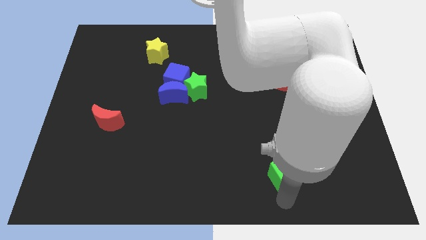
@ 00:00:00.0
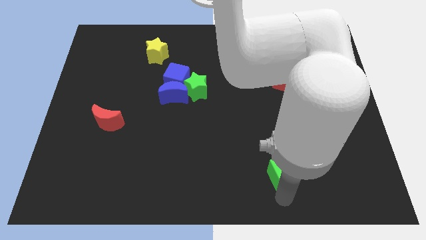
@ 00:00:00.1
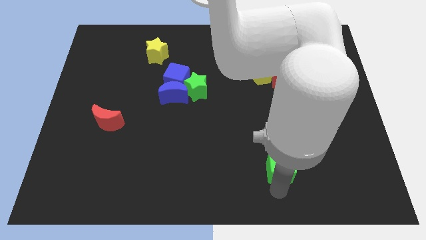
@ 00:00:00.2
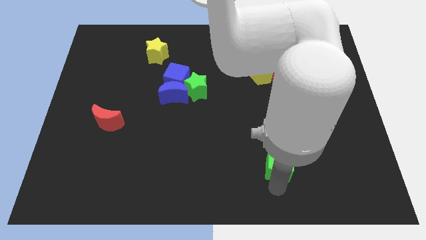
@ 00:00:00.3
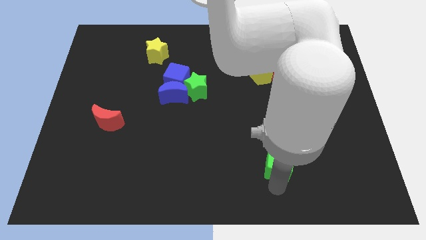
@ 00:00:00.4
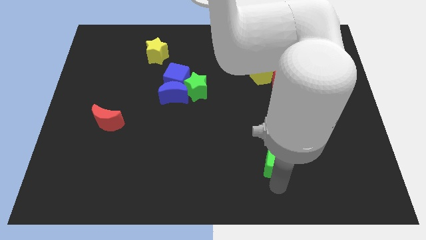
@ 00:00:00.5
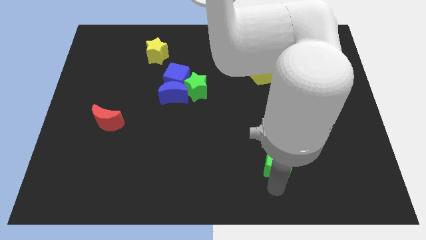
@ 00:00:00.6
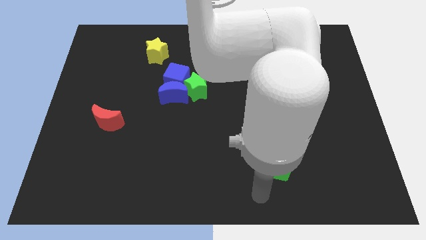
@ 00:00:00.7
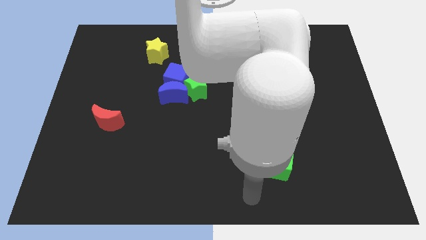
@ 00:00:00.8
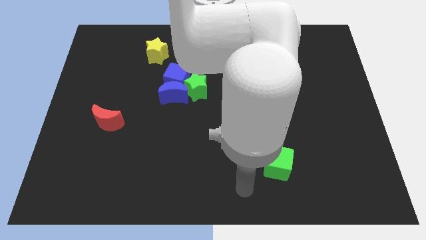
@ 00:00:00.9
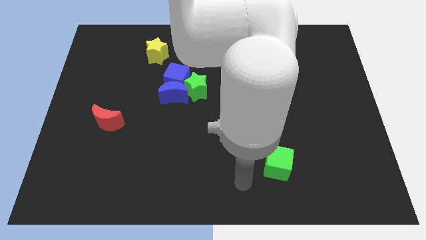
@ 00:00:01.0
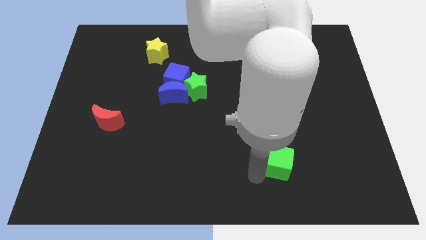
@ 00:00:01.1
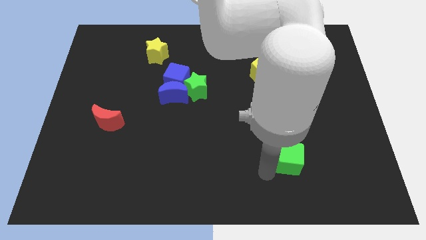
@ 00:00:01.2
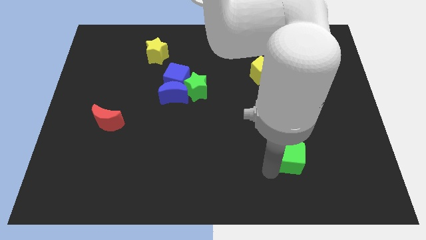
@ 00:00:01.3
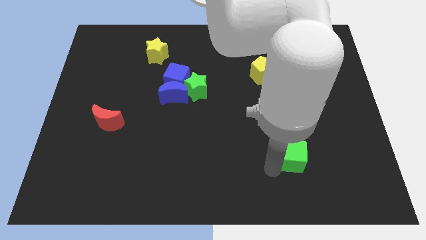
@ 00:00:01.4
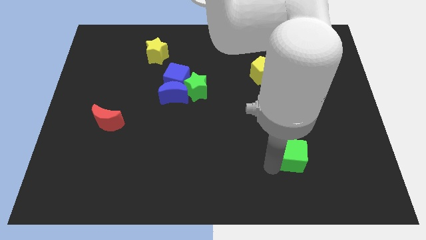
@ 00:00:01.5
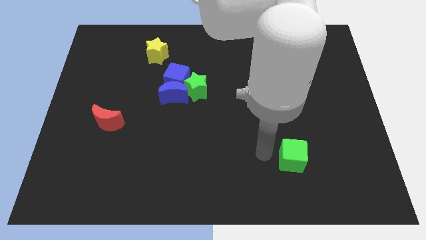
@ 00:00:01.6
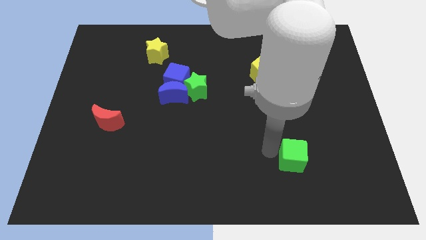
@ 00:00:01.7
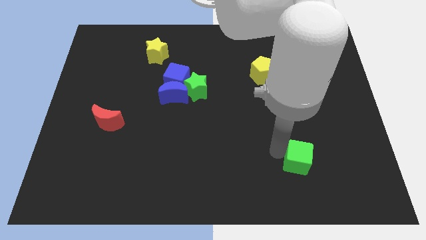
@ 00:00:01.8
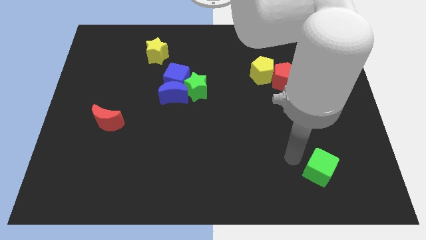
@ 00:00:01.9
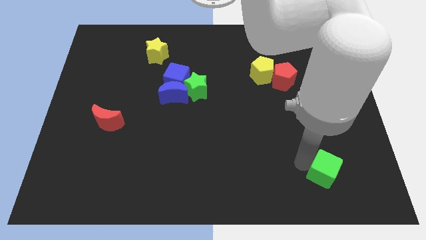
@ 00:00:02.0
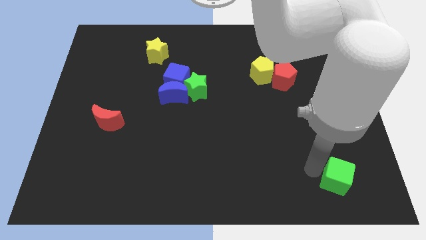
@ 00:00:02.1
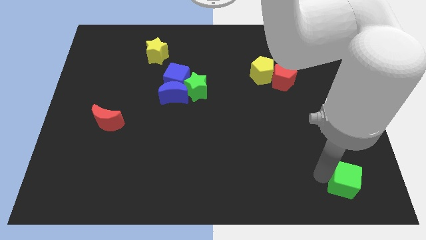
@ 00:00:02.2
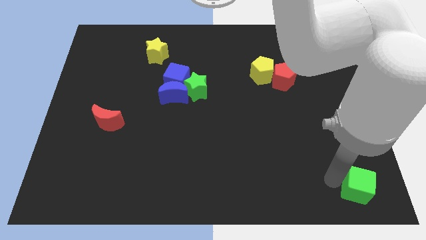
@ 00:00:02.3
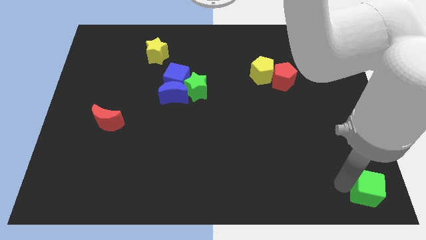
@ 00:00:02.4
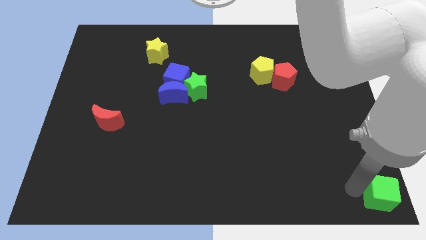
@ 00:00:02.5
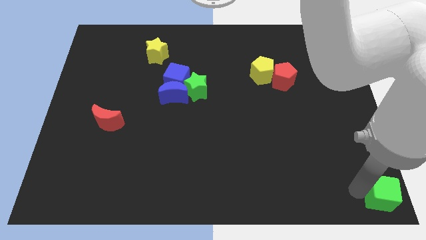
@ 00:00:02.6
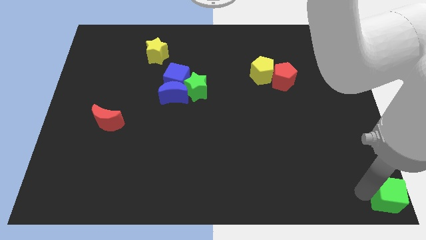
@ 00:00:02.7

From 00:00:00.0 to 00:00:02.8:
move the green cube to the bottom right of the board

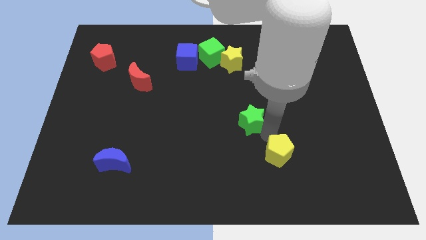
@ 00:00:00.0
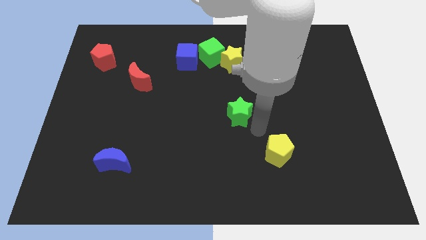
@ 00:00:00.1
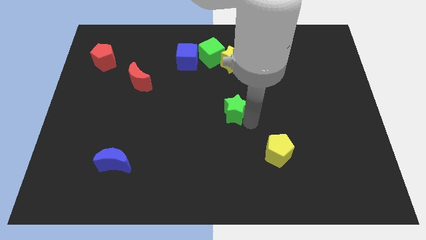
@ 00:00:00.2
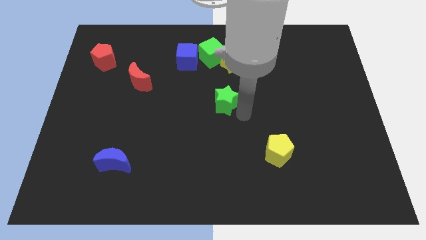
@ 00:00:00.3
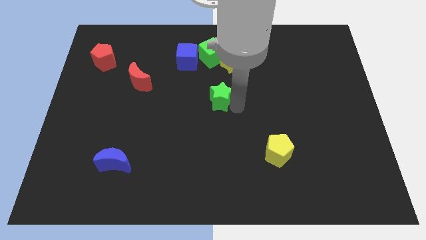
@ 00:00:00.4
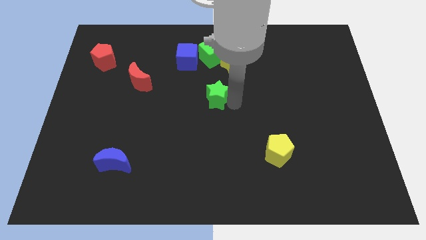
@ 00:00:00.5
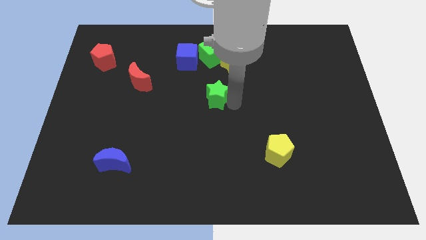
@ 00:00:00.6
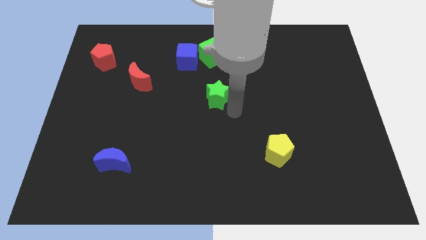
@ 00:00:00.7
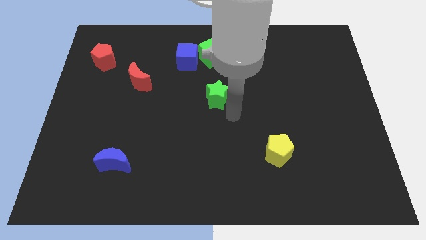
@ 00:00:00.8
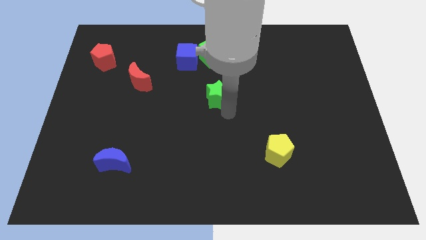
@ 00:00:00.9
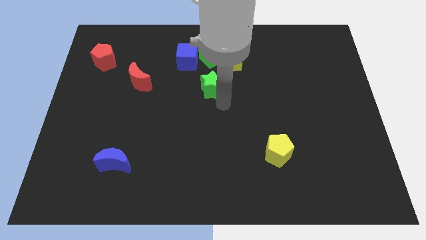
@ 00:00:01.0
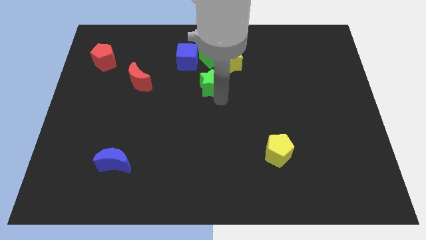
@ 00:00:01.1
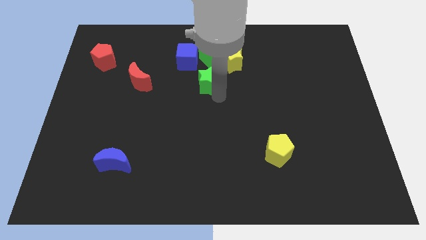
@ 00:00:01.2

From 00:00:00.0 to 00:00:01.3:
place the green star at the bottom of green cube

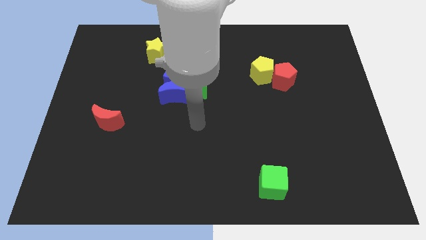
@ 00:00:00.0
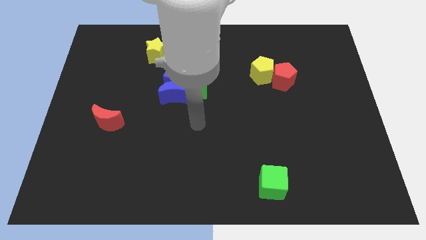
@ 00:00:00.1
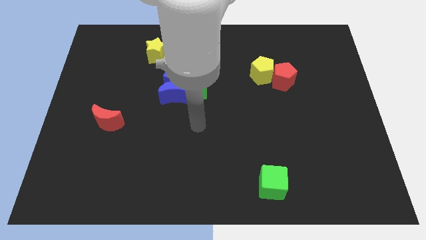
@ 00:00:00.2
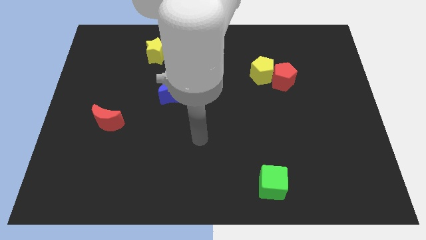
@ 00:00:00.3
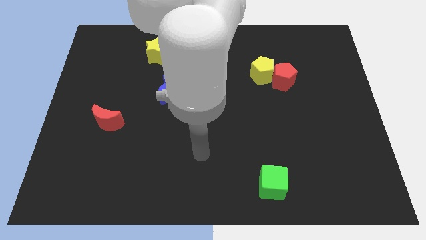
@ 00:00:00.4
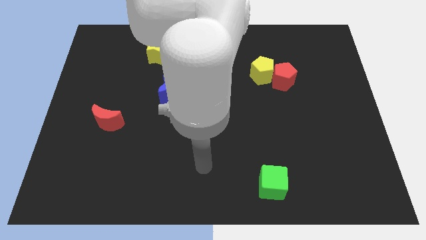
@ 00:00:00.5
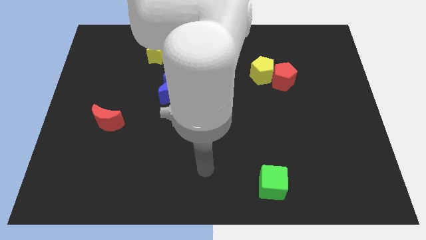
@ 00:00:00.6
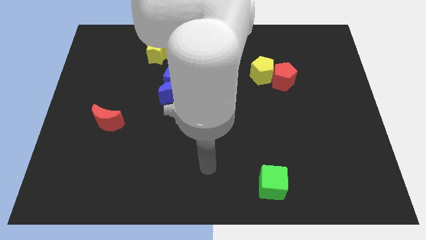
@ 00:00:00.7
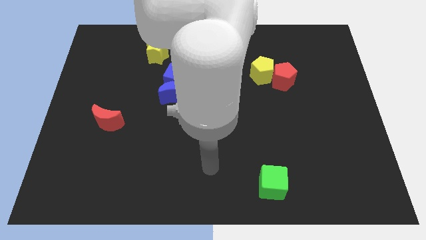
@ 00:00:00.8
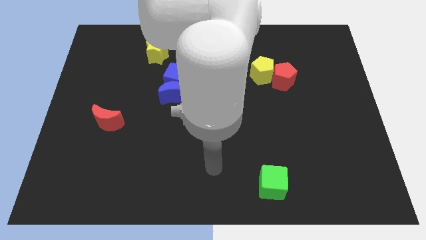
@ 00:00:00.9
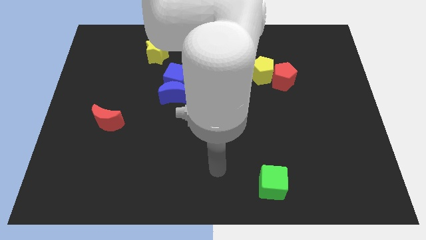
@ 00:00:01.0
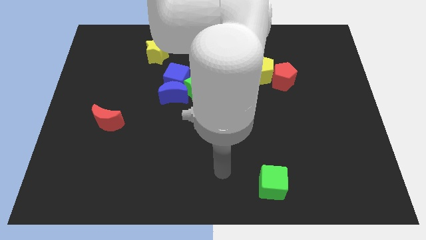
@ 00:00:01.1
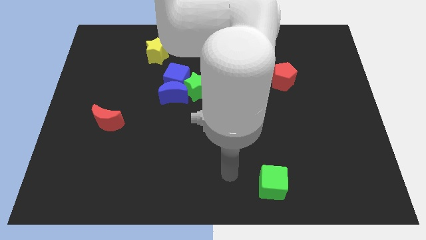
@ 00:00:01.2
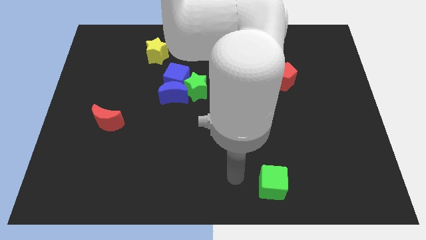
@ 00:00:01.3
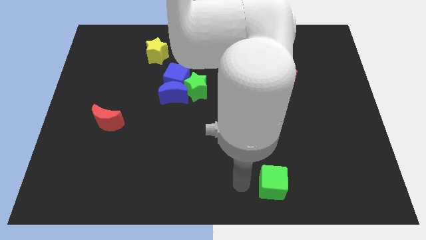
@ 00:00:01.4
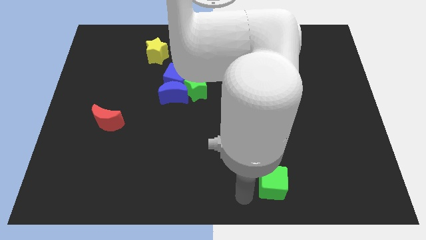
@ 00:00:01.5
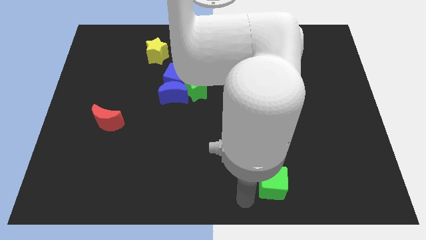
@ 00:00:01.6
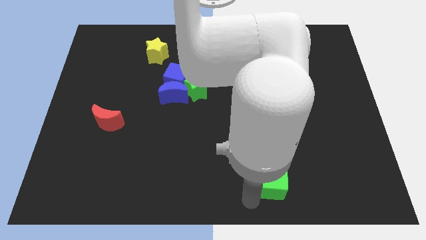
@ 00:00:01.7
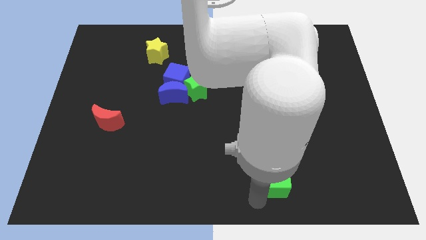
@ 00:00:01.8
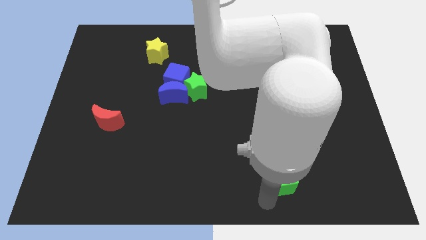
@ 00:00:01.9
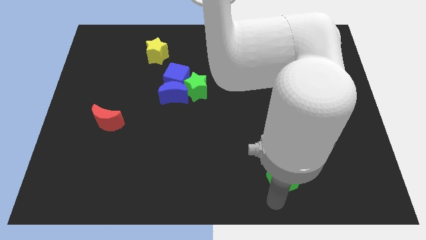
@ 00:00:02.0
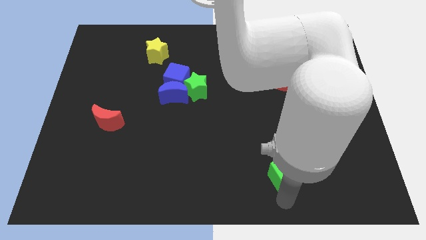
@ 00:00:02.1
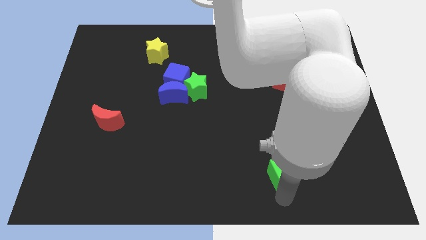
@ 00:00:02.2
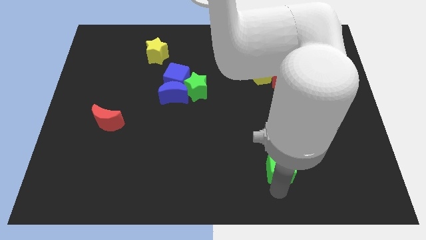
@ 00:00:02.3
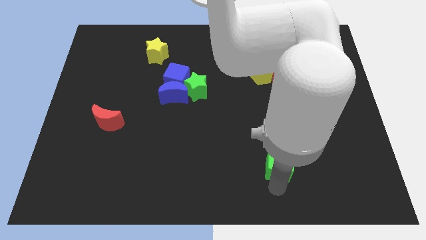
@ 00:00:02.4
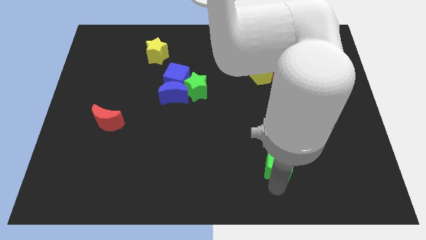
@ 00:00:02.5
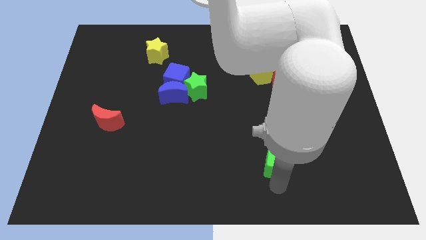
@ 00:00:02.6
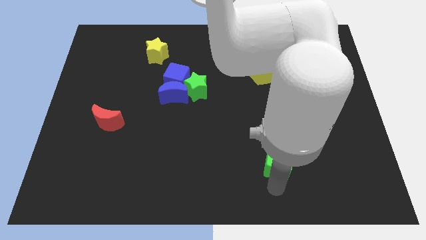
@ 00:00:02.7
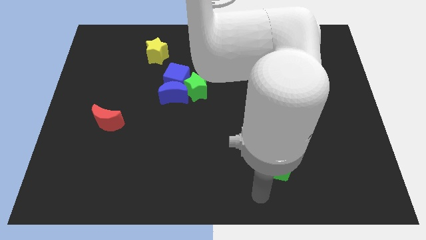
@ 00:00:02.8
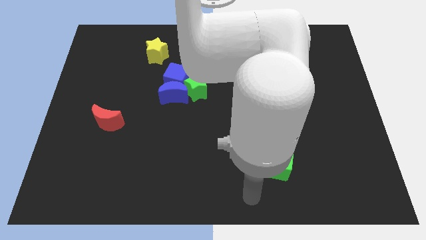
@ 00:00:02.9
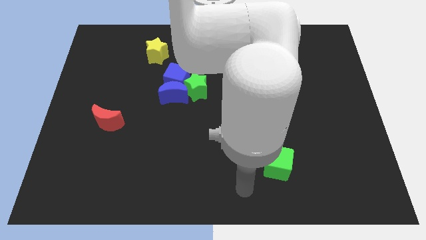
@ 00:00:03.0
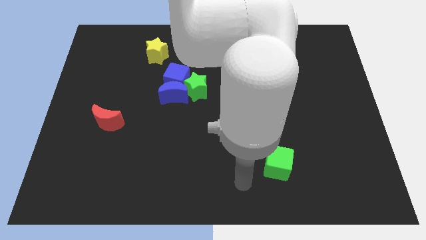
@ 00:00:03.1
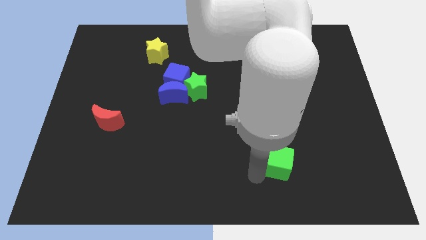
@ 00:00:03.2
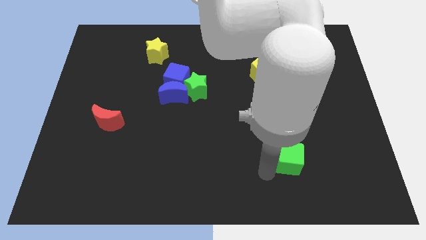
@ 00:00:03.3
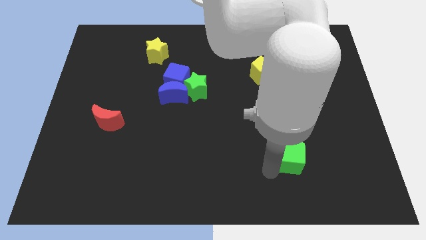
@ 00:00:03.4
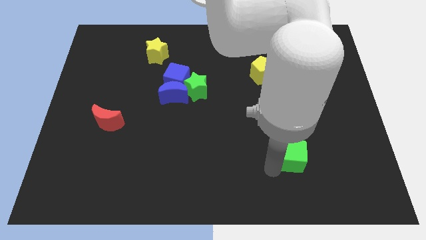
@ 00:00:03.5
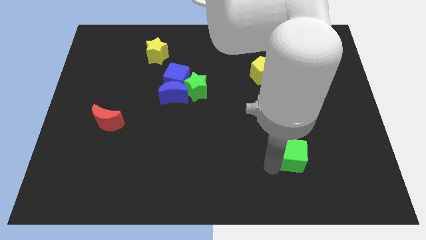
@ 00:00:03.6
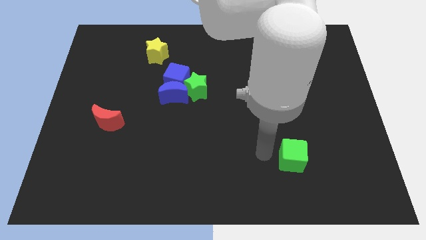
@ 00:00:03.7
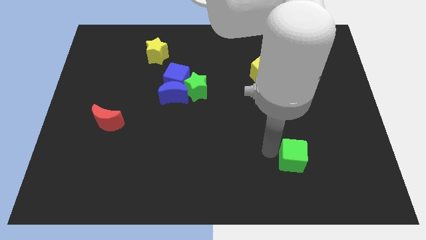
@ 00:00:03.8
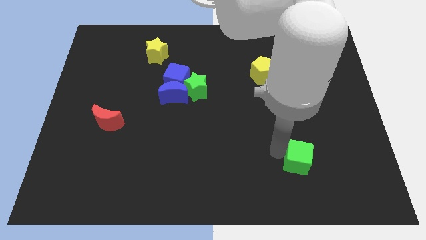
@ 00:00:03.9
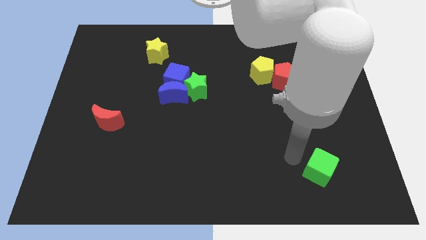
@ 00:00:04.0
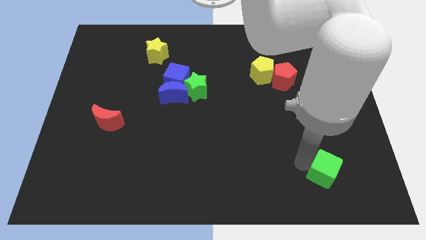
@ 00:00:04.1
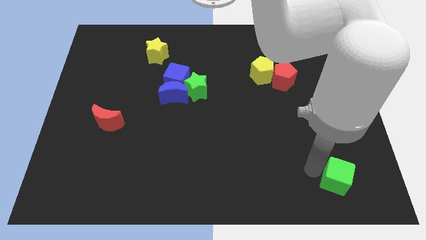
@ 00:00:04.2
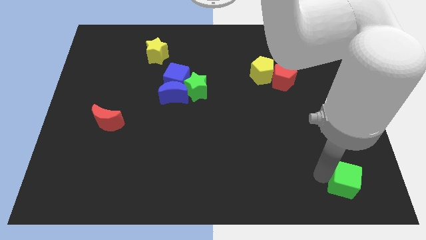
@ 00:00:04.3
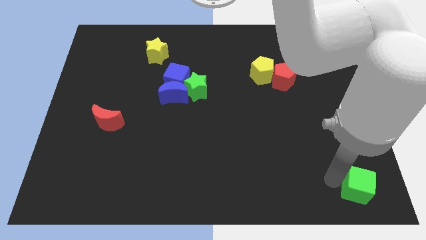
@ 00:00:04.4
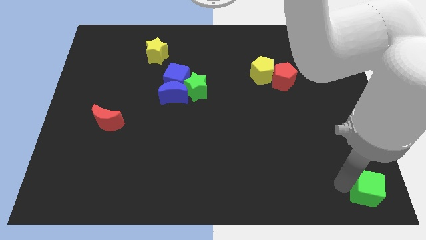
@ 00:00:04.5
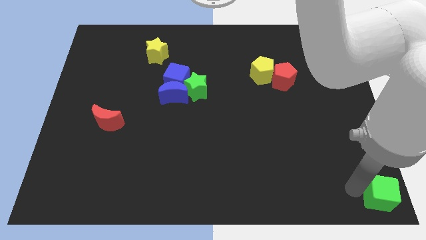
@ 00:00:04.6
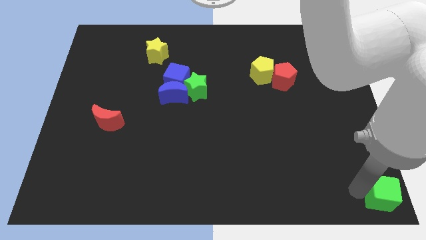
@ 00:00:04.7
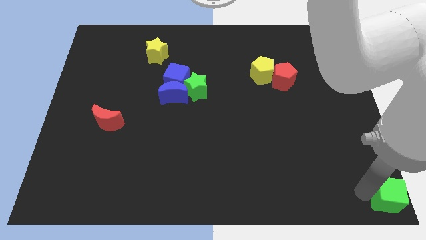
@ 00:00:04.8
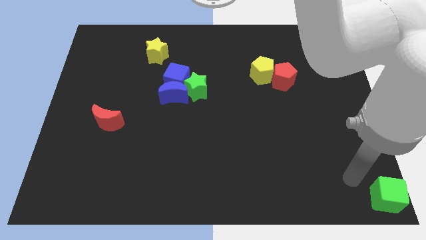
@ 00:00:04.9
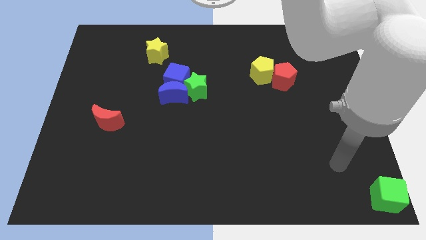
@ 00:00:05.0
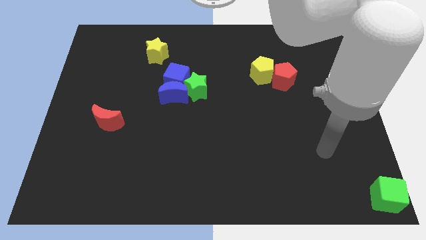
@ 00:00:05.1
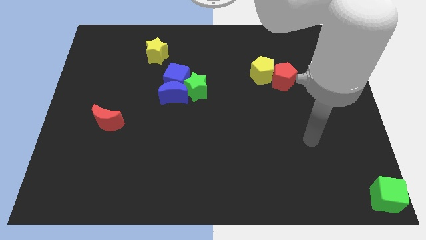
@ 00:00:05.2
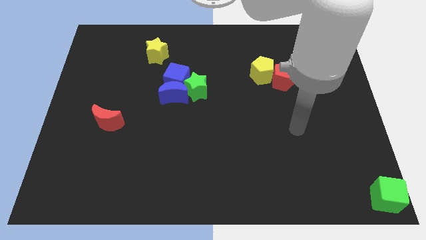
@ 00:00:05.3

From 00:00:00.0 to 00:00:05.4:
move the green cube to the bottom right corner
